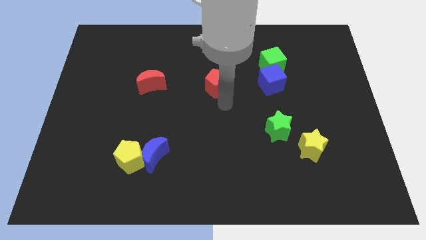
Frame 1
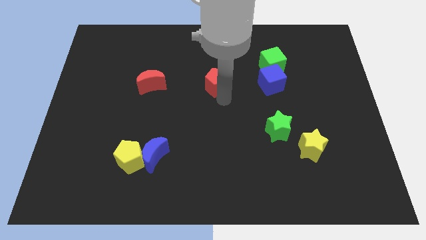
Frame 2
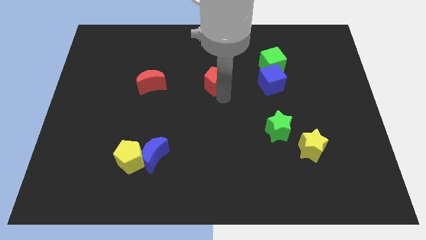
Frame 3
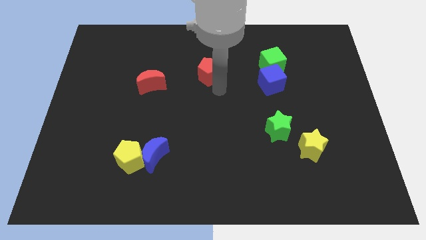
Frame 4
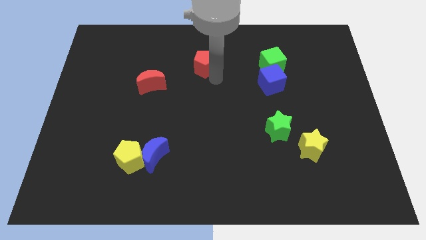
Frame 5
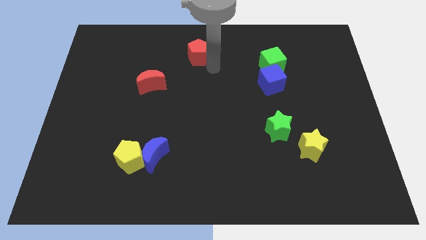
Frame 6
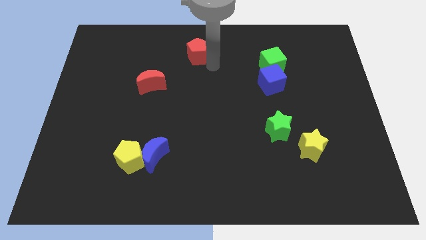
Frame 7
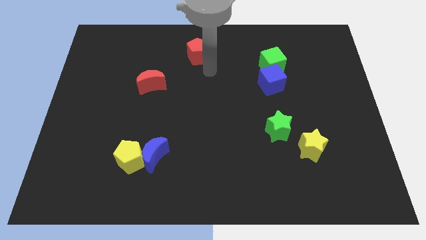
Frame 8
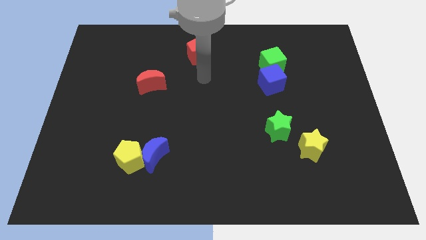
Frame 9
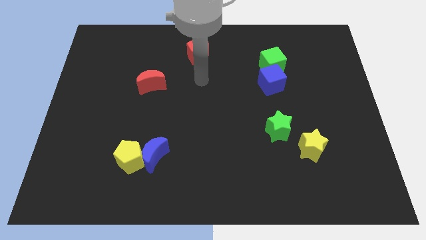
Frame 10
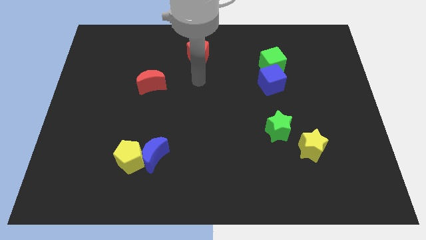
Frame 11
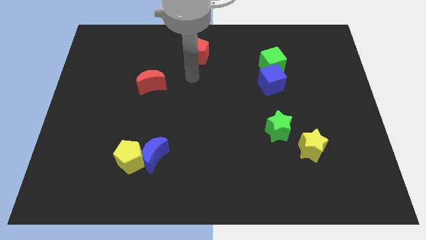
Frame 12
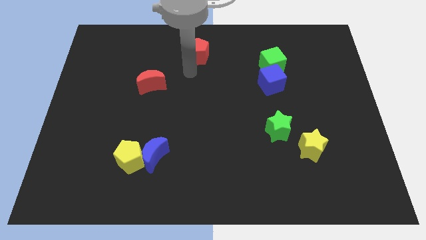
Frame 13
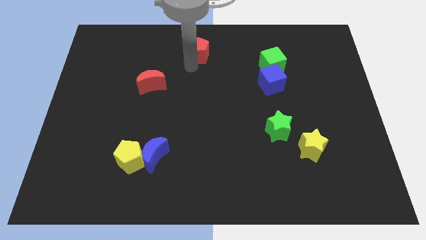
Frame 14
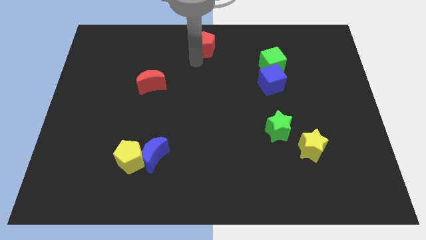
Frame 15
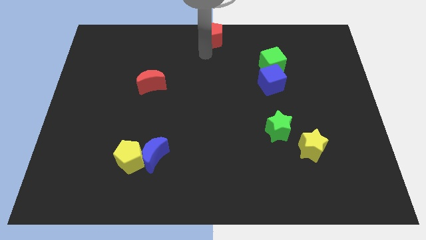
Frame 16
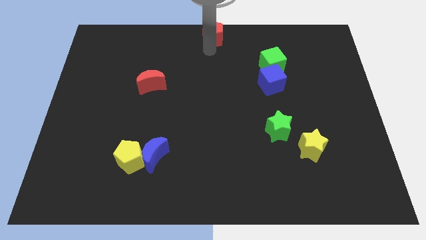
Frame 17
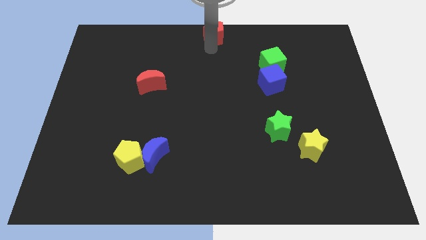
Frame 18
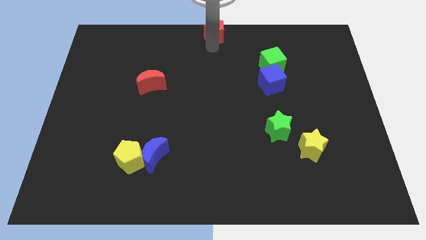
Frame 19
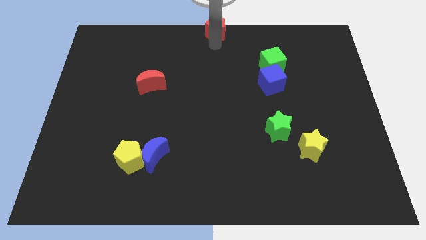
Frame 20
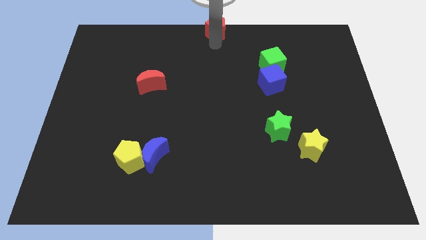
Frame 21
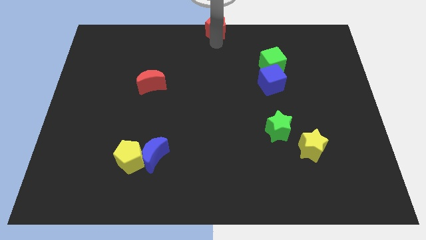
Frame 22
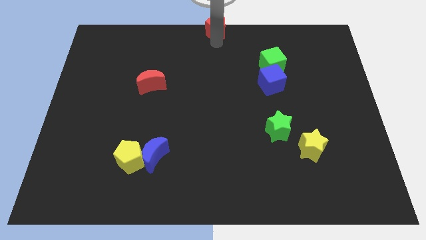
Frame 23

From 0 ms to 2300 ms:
move the red pentagon to the top center of the board

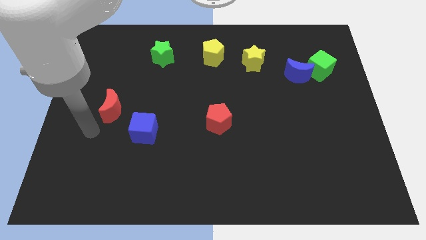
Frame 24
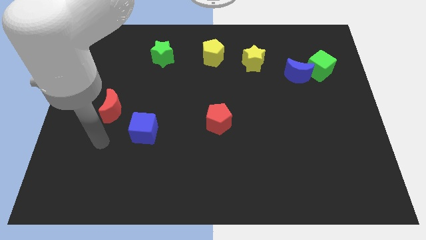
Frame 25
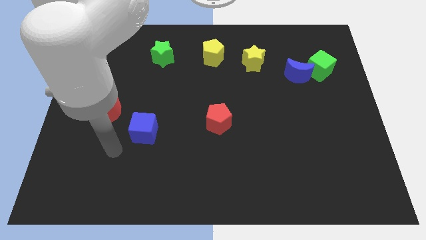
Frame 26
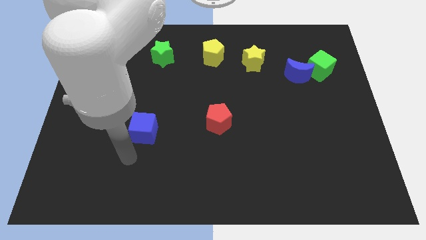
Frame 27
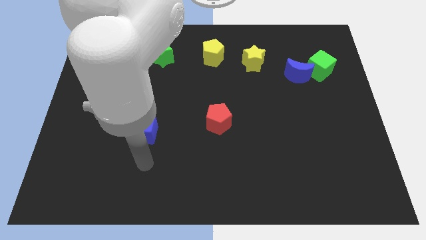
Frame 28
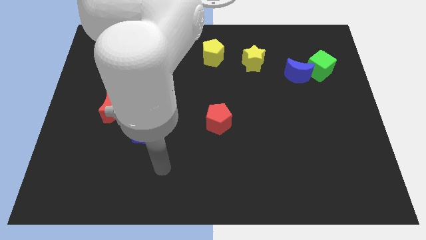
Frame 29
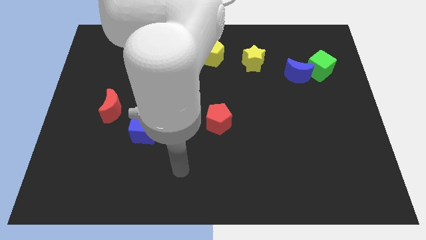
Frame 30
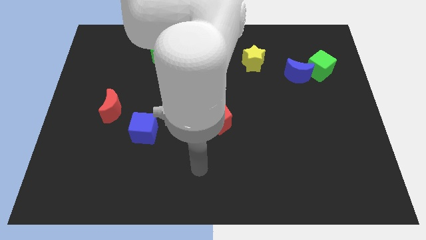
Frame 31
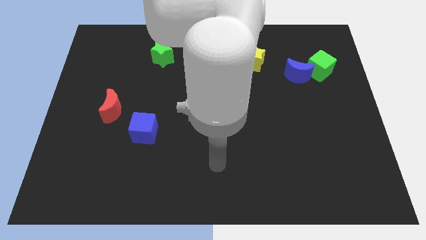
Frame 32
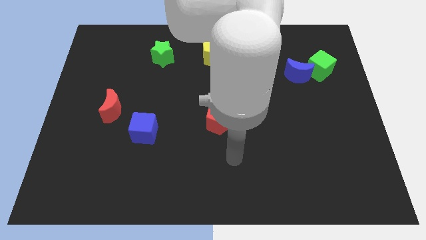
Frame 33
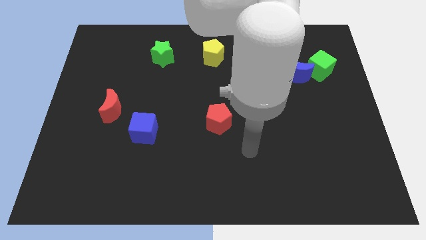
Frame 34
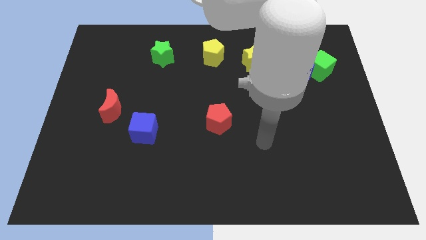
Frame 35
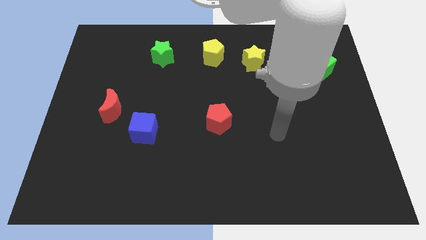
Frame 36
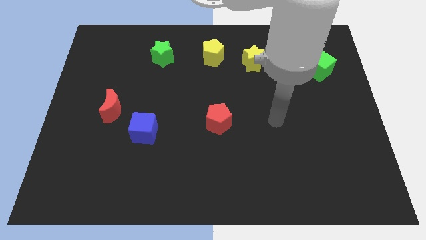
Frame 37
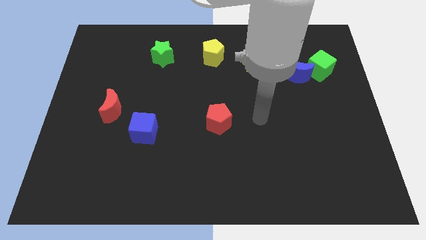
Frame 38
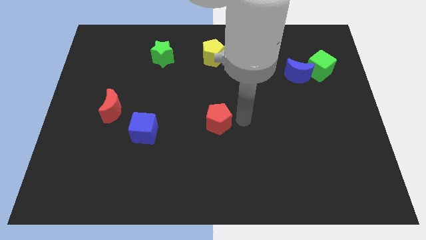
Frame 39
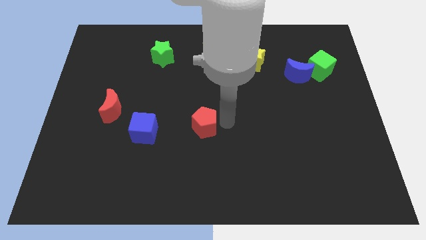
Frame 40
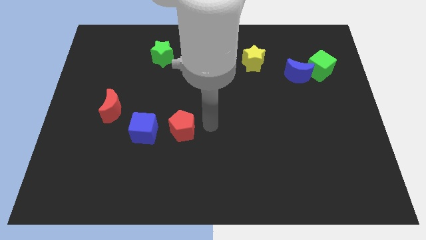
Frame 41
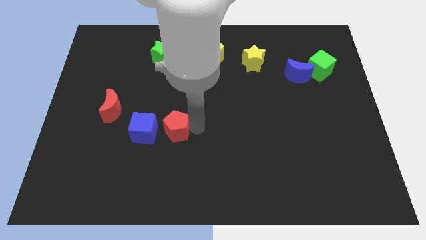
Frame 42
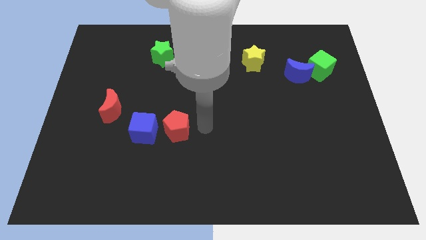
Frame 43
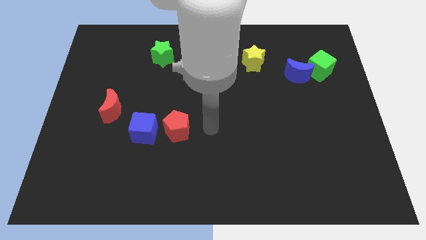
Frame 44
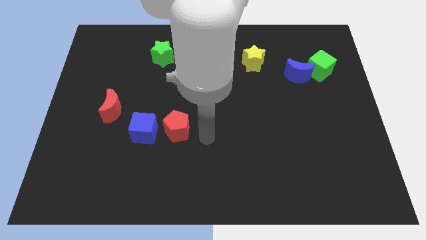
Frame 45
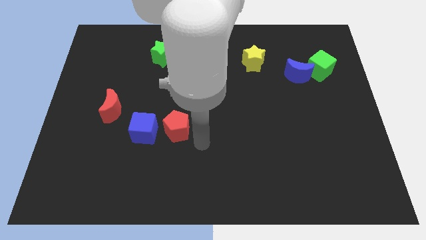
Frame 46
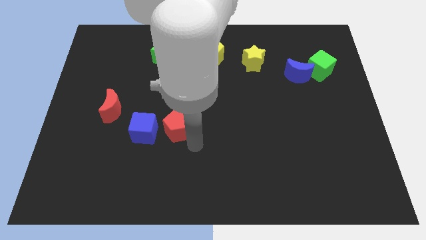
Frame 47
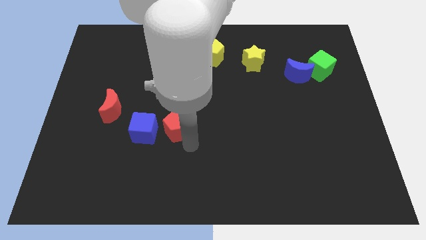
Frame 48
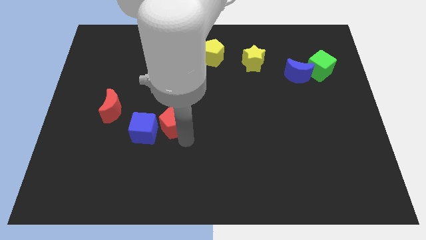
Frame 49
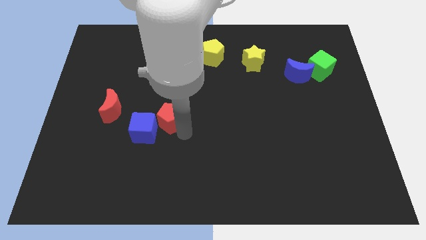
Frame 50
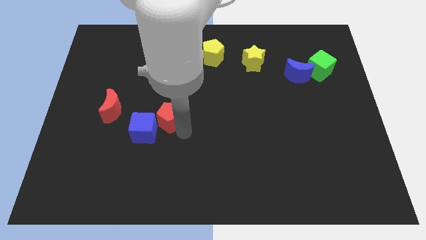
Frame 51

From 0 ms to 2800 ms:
move red pentagon into blue cube

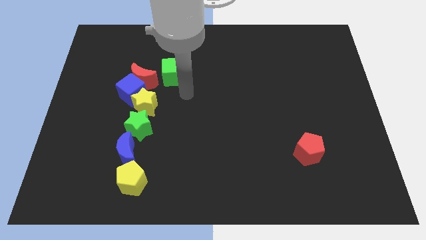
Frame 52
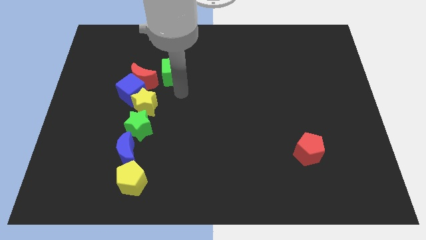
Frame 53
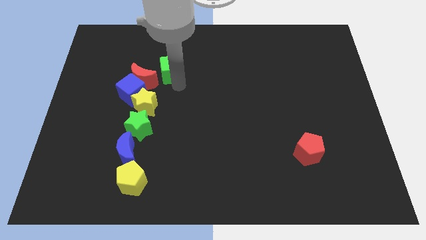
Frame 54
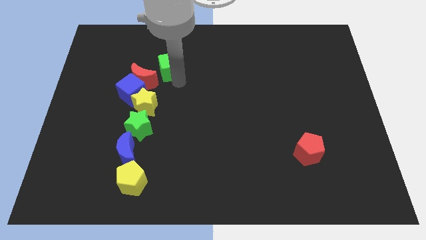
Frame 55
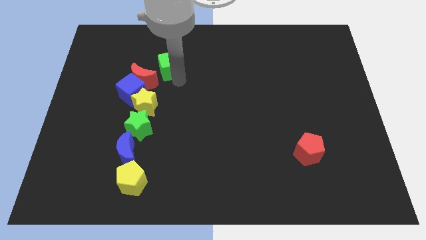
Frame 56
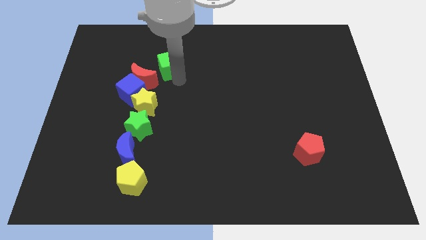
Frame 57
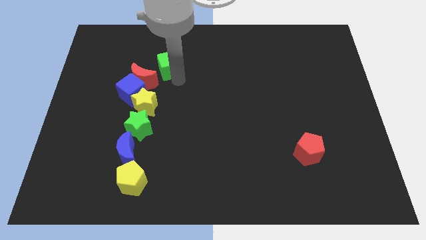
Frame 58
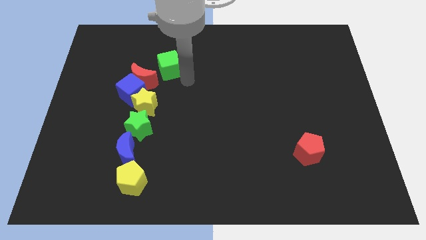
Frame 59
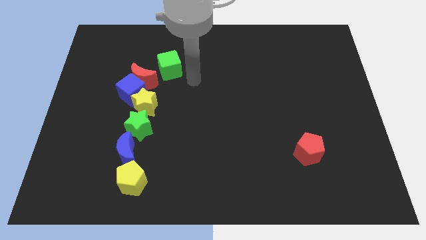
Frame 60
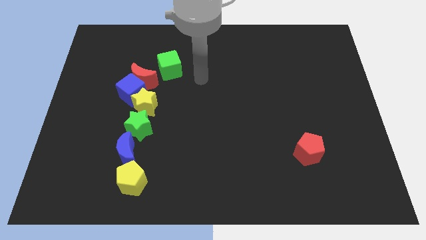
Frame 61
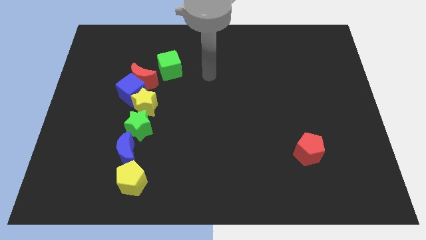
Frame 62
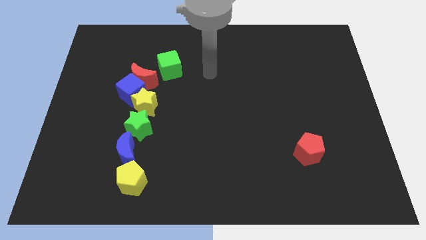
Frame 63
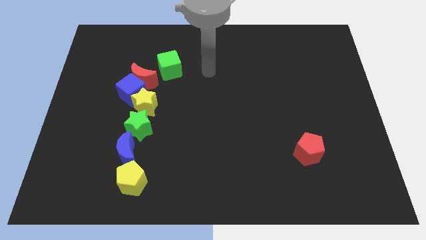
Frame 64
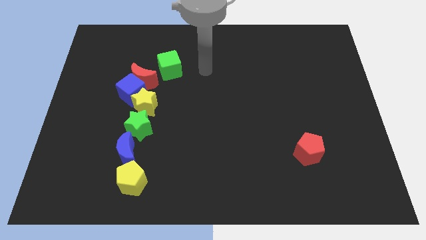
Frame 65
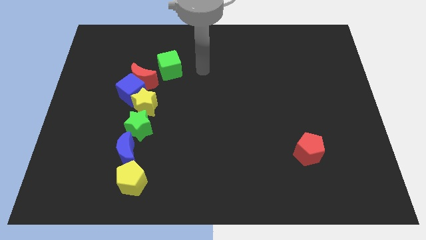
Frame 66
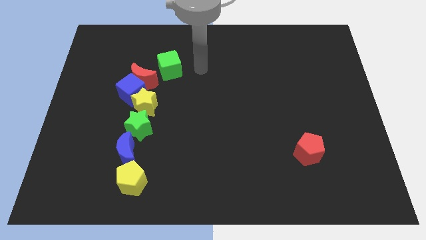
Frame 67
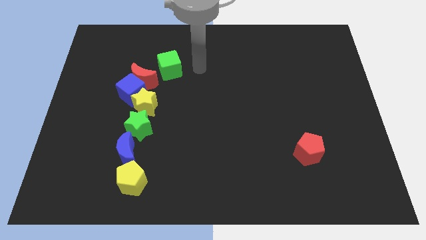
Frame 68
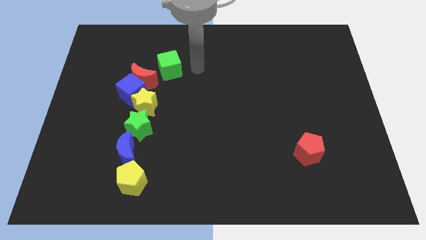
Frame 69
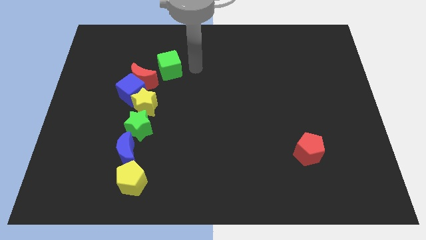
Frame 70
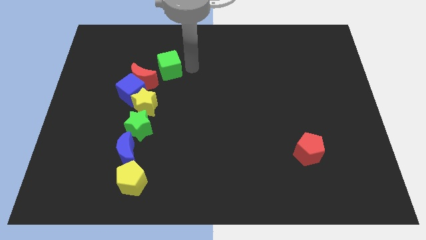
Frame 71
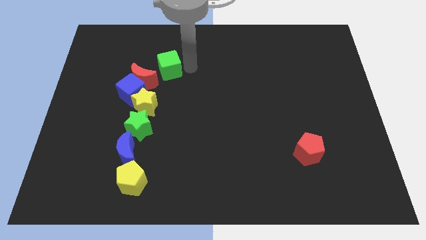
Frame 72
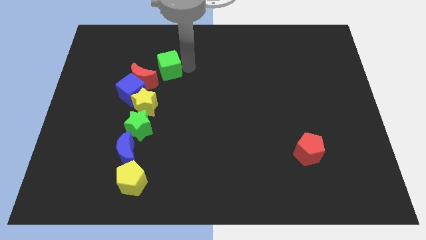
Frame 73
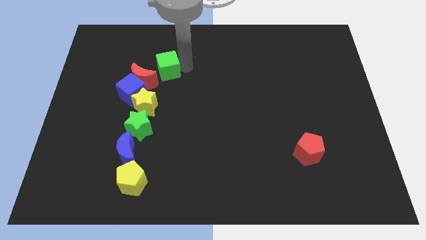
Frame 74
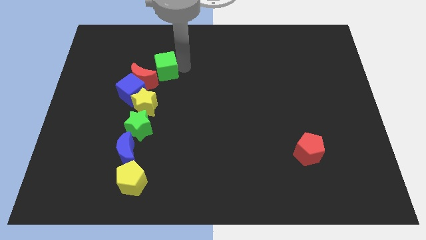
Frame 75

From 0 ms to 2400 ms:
place the green cube to the right of the red moon

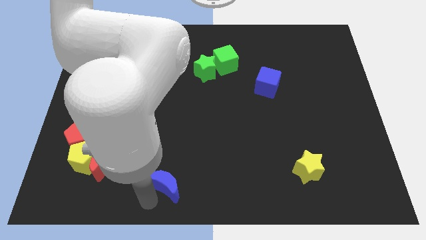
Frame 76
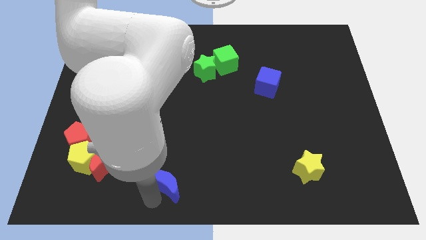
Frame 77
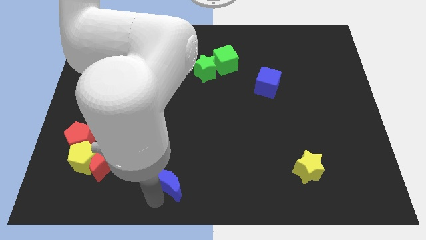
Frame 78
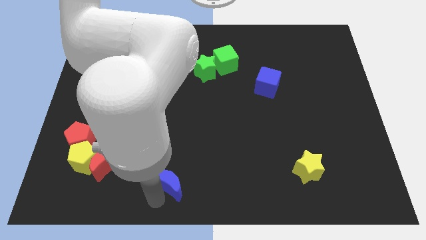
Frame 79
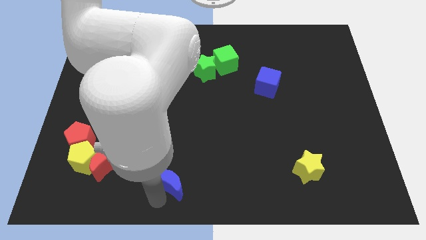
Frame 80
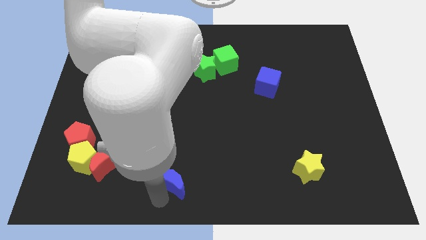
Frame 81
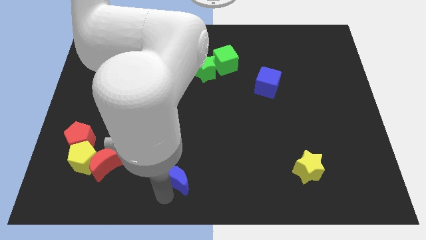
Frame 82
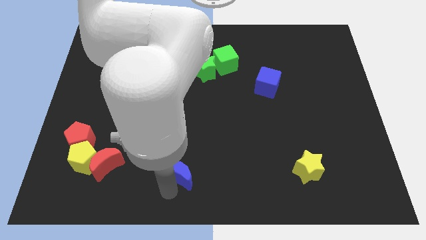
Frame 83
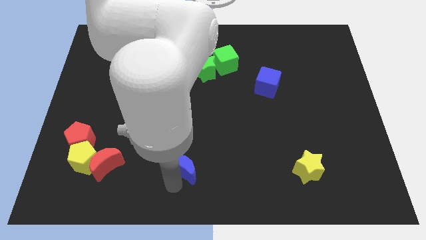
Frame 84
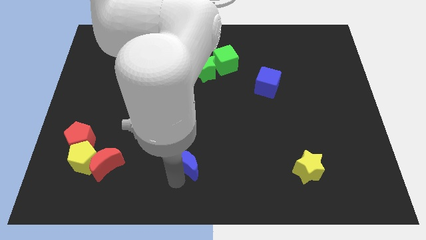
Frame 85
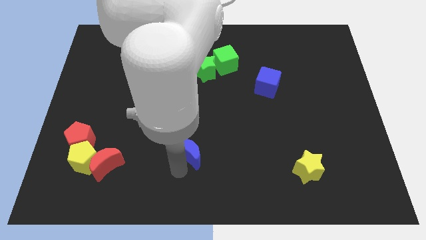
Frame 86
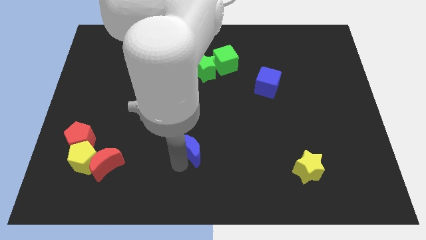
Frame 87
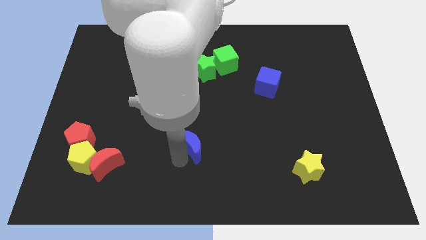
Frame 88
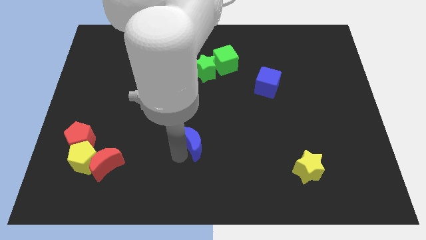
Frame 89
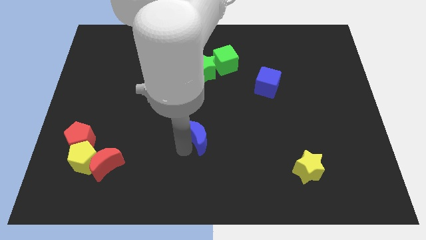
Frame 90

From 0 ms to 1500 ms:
push blue moon upwards
